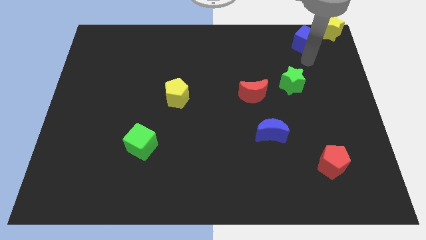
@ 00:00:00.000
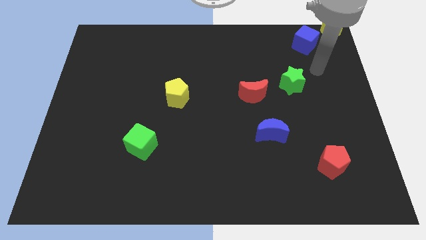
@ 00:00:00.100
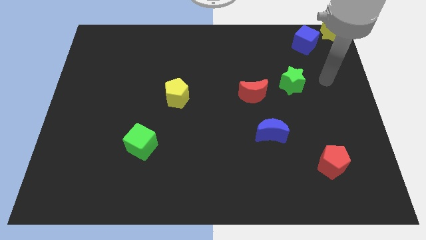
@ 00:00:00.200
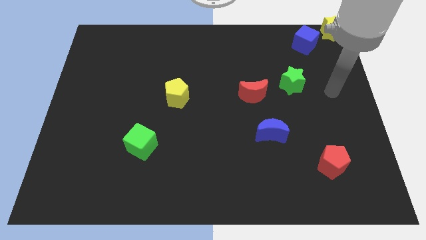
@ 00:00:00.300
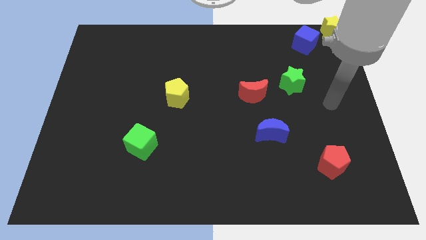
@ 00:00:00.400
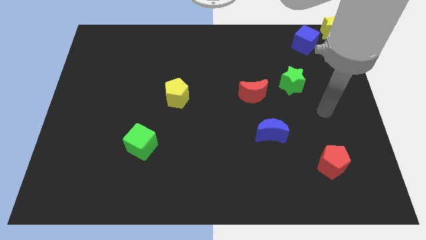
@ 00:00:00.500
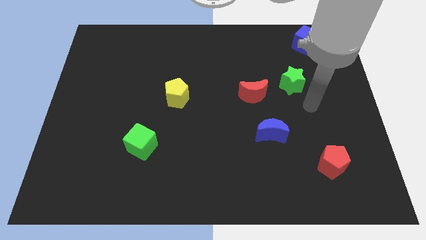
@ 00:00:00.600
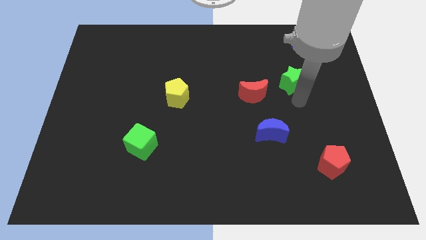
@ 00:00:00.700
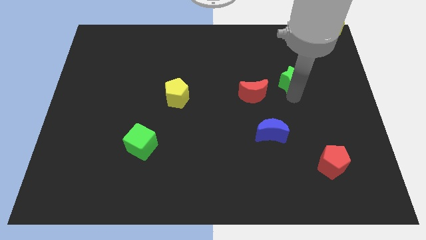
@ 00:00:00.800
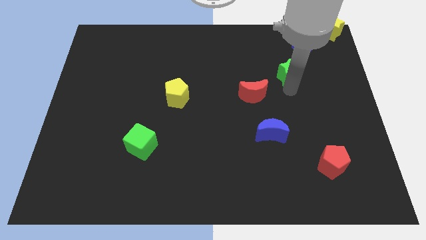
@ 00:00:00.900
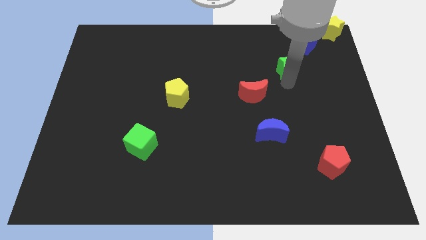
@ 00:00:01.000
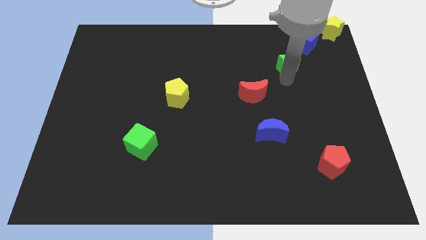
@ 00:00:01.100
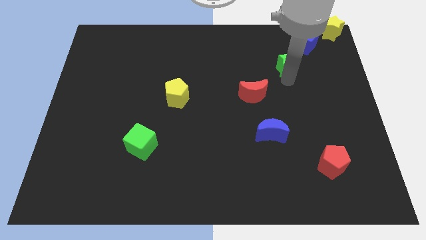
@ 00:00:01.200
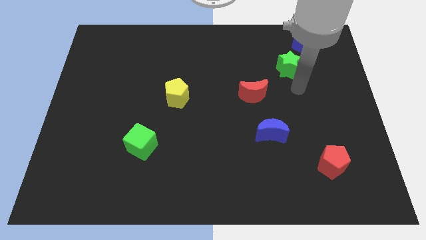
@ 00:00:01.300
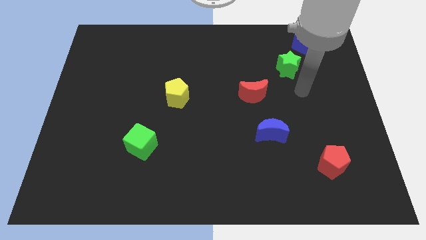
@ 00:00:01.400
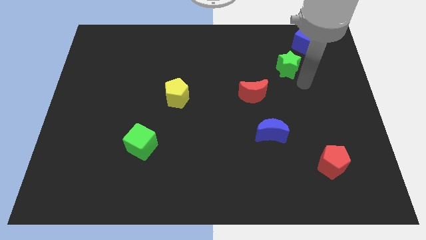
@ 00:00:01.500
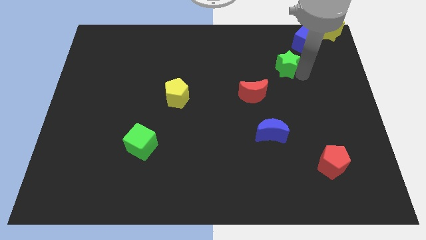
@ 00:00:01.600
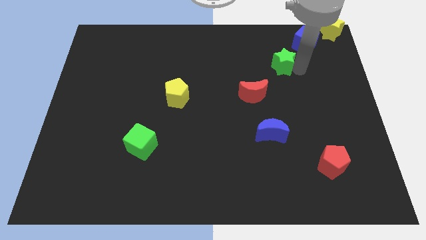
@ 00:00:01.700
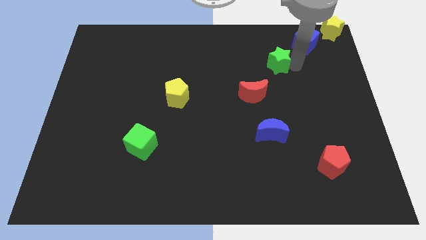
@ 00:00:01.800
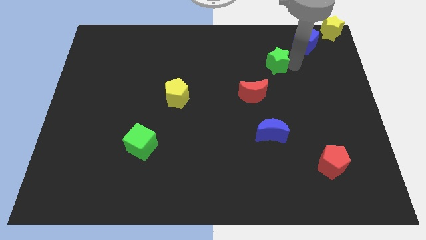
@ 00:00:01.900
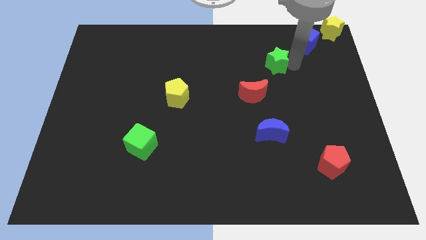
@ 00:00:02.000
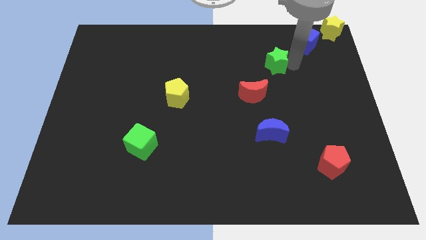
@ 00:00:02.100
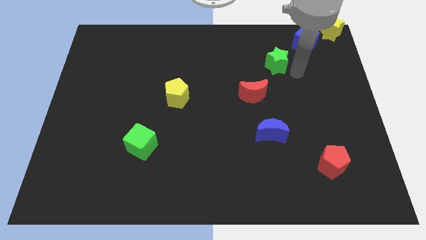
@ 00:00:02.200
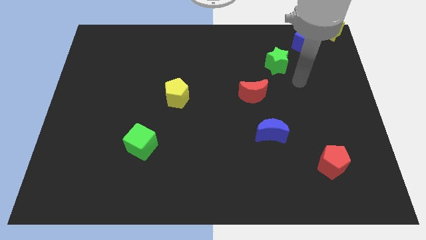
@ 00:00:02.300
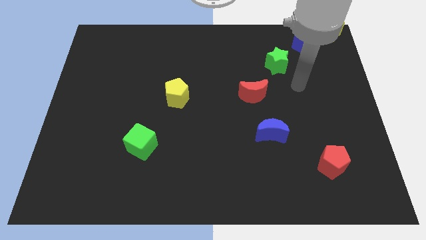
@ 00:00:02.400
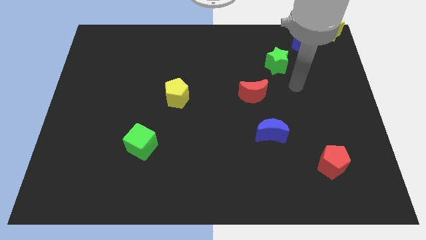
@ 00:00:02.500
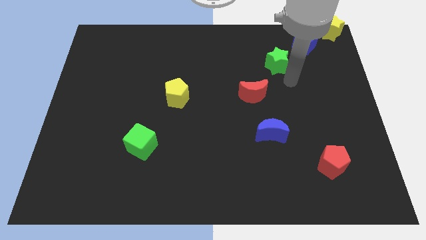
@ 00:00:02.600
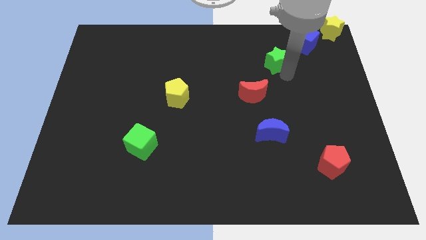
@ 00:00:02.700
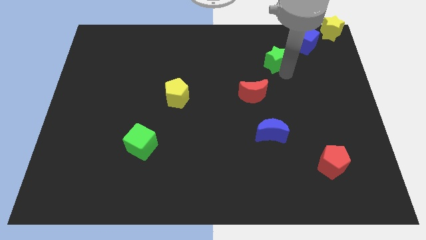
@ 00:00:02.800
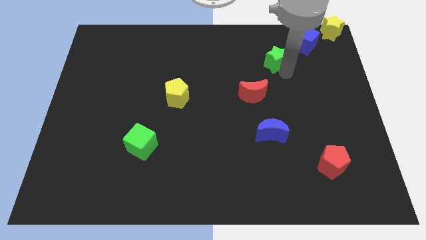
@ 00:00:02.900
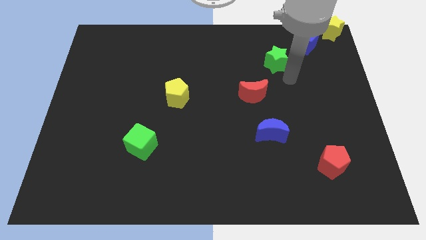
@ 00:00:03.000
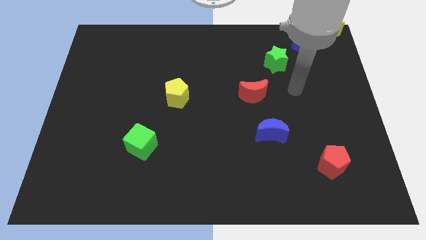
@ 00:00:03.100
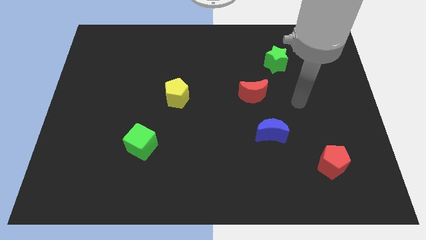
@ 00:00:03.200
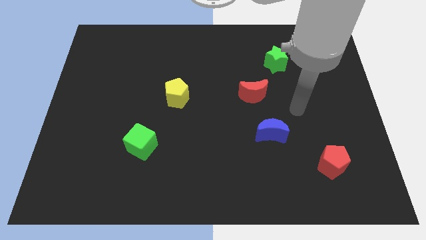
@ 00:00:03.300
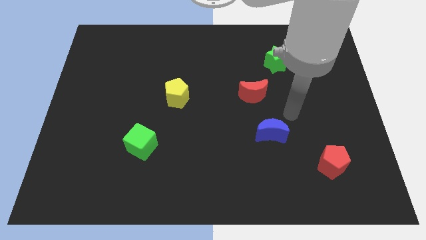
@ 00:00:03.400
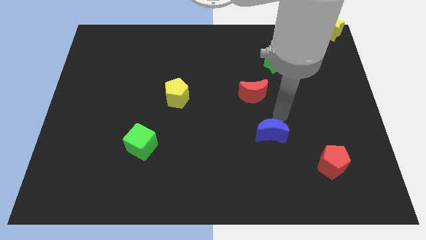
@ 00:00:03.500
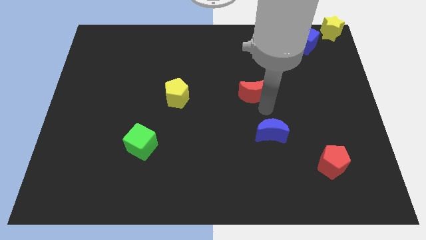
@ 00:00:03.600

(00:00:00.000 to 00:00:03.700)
put the green star between the red moon and blue cube

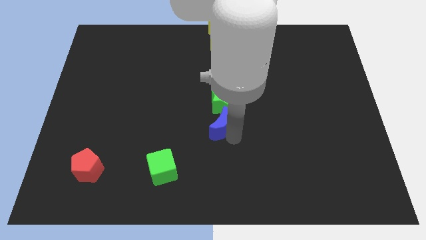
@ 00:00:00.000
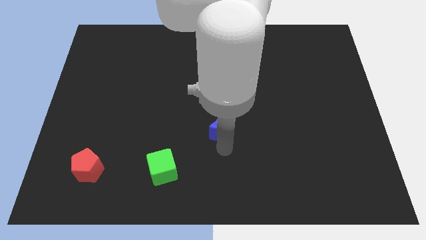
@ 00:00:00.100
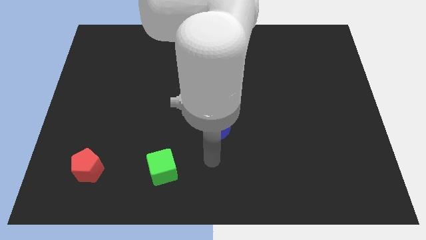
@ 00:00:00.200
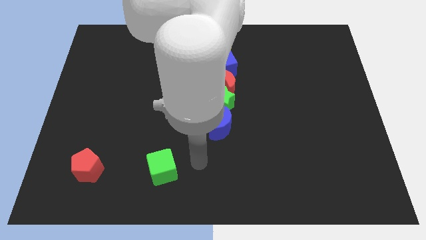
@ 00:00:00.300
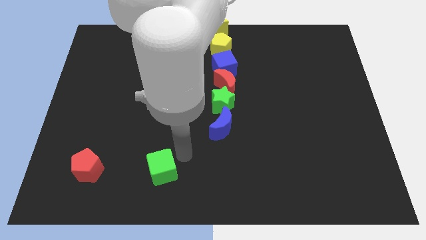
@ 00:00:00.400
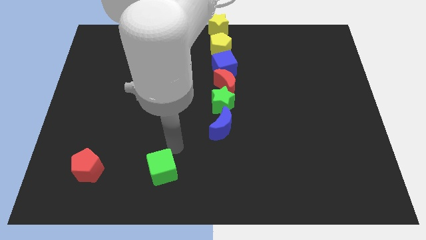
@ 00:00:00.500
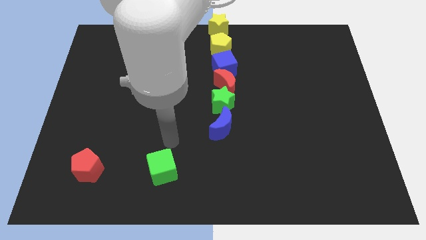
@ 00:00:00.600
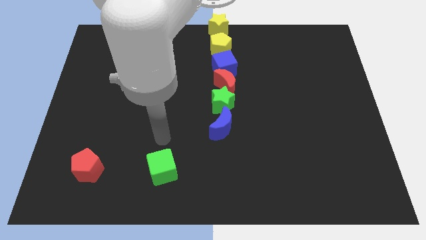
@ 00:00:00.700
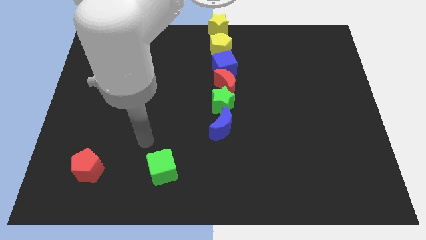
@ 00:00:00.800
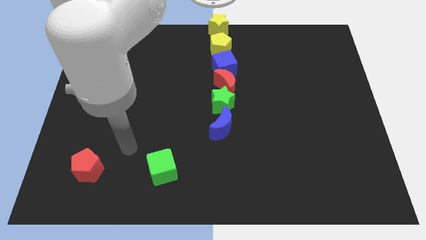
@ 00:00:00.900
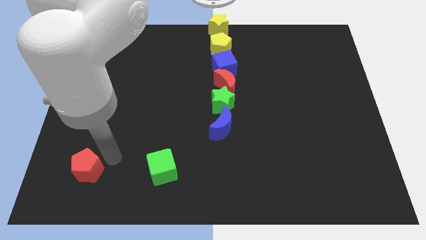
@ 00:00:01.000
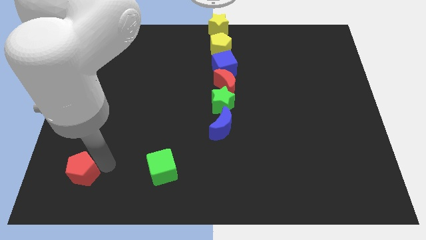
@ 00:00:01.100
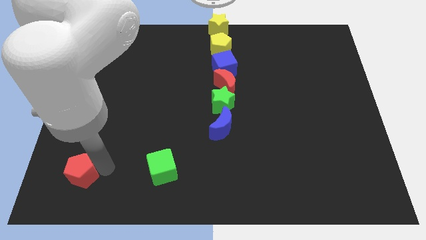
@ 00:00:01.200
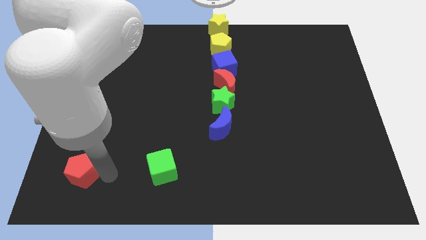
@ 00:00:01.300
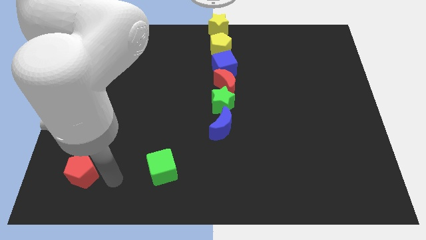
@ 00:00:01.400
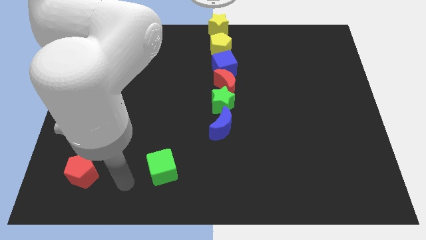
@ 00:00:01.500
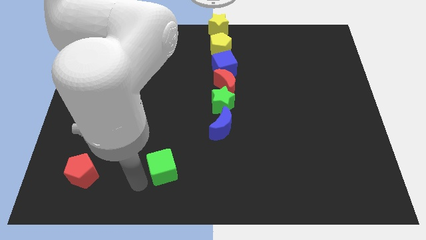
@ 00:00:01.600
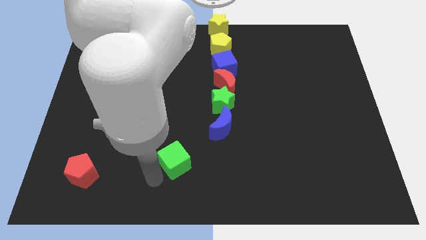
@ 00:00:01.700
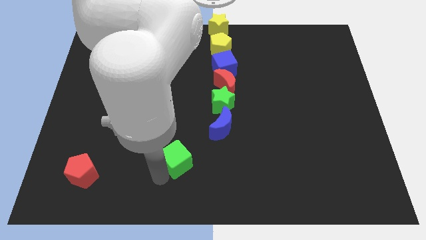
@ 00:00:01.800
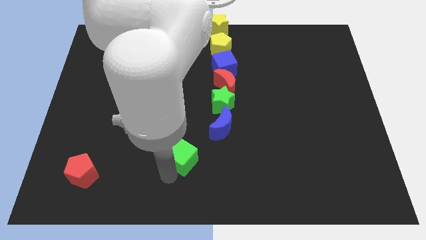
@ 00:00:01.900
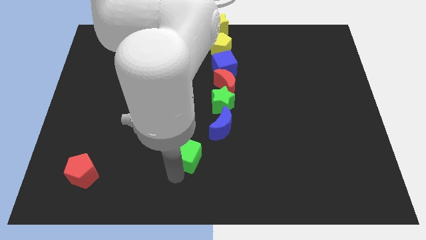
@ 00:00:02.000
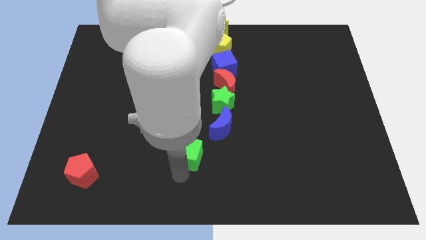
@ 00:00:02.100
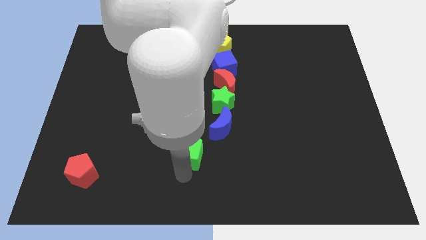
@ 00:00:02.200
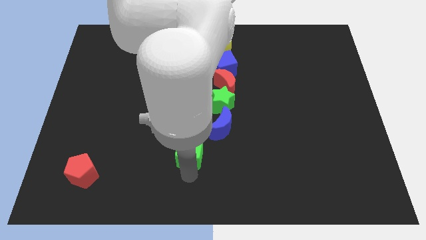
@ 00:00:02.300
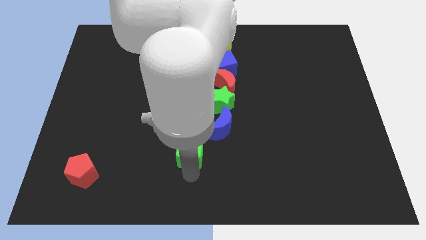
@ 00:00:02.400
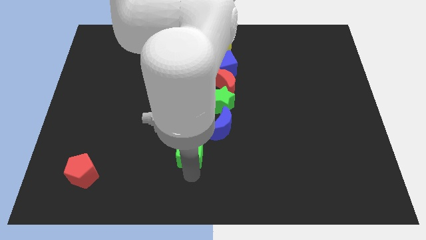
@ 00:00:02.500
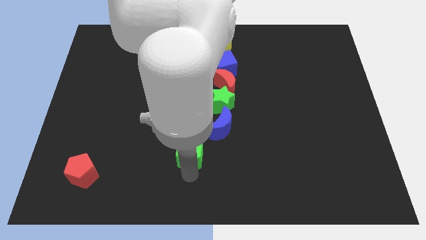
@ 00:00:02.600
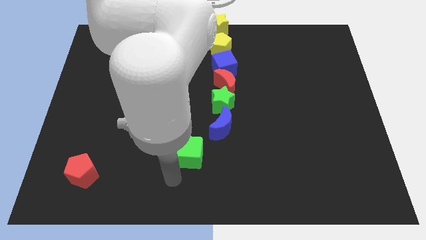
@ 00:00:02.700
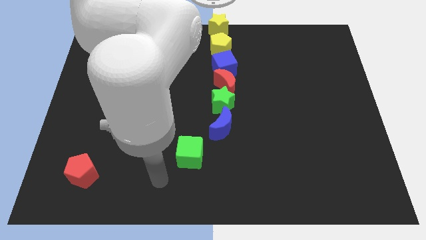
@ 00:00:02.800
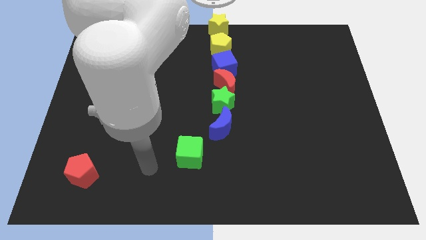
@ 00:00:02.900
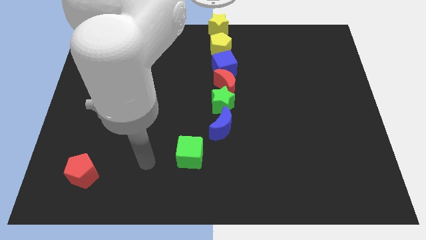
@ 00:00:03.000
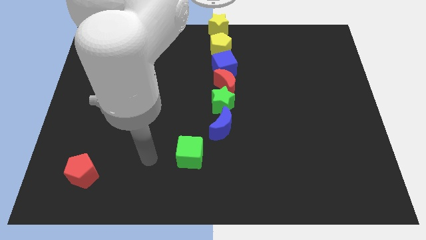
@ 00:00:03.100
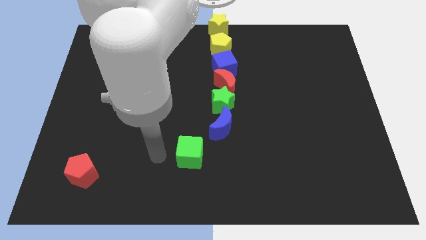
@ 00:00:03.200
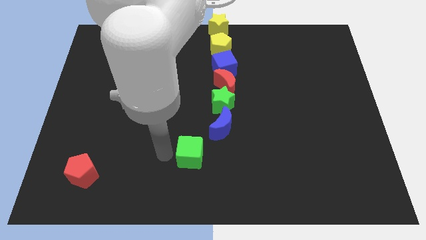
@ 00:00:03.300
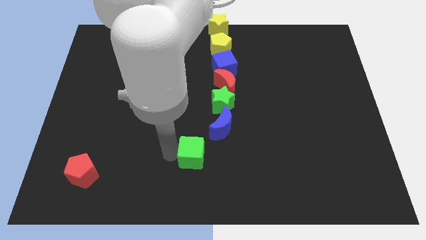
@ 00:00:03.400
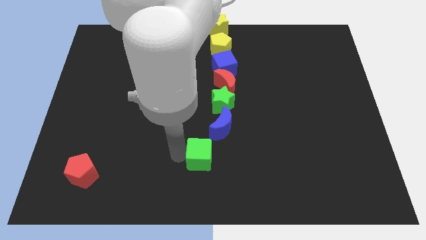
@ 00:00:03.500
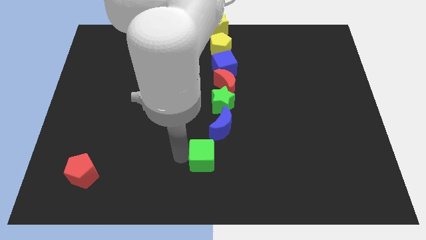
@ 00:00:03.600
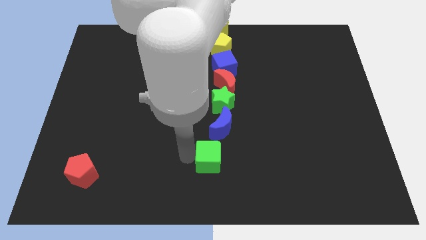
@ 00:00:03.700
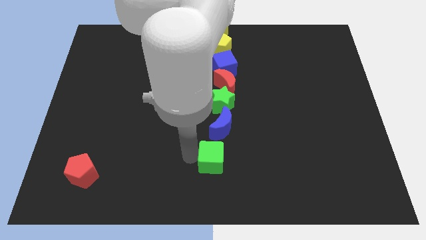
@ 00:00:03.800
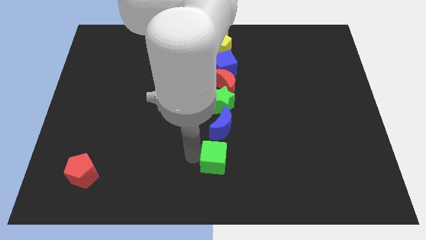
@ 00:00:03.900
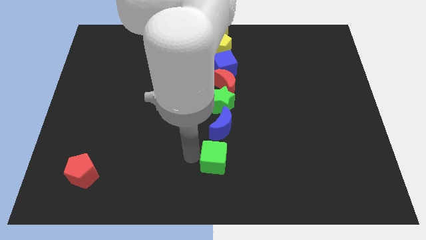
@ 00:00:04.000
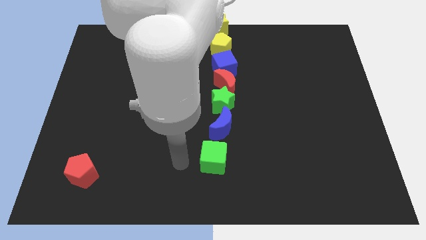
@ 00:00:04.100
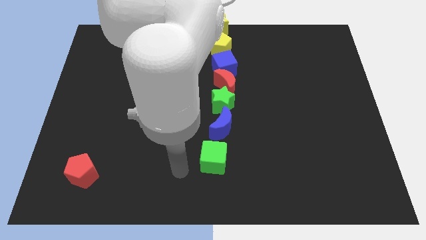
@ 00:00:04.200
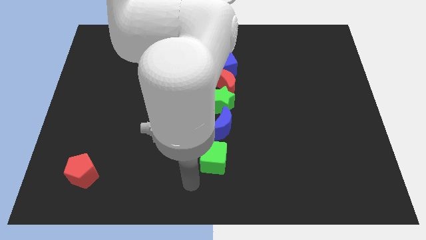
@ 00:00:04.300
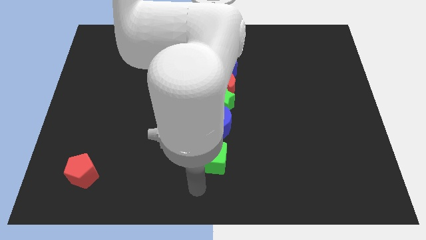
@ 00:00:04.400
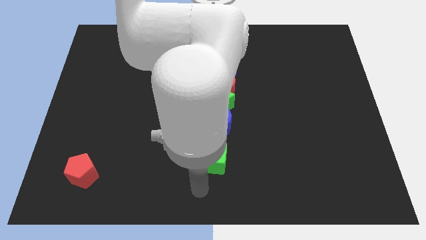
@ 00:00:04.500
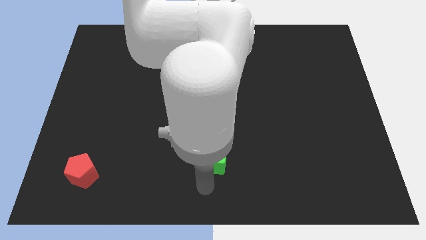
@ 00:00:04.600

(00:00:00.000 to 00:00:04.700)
place the green cube below the blue crescent

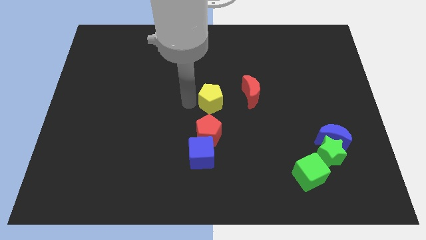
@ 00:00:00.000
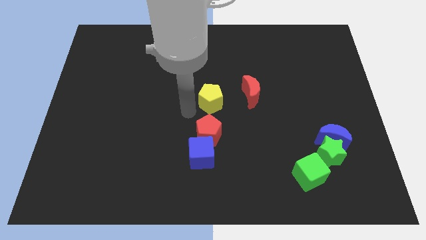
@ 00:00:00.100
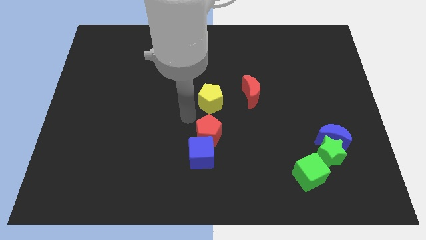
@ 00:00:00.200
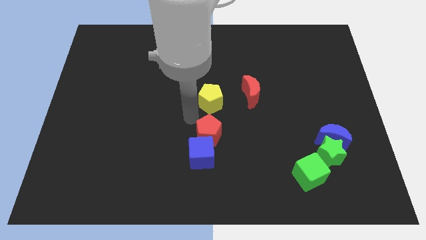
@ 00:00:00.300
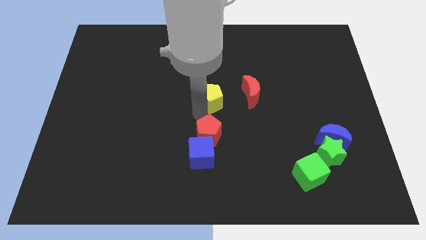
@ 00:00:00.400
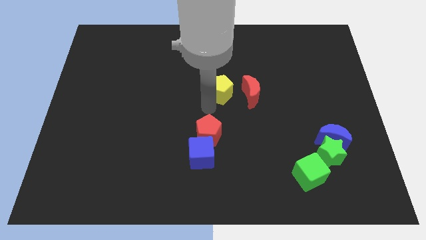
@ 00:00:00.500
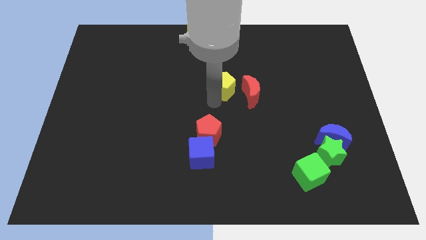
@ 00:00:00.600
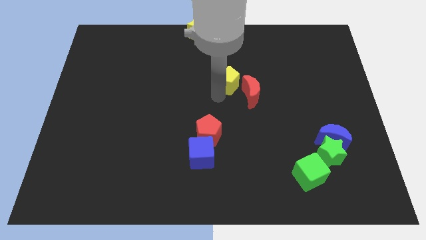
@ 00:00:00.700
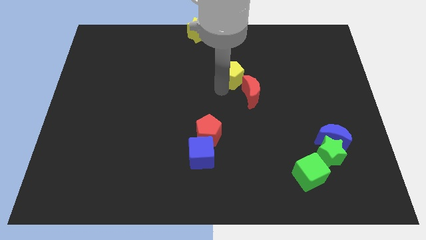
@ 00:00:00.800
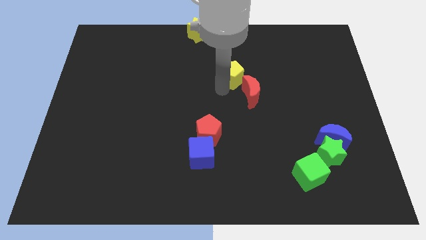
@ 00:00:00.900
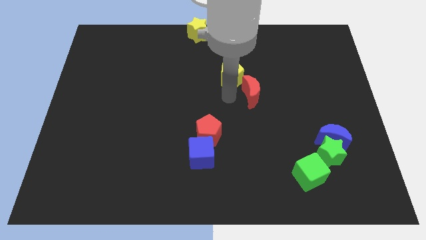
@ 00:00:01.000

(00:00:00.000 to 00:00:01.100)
push the yellow pentagon into red moon
